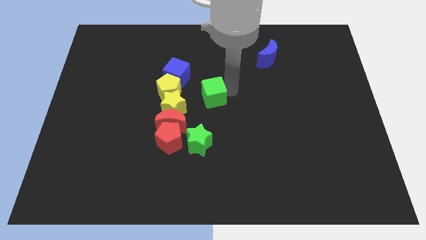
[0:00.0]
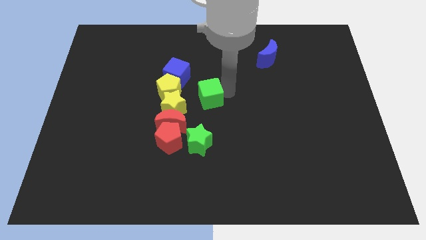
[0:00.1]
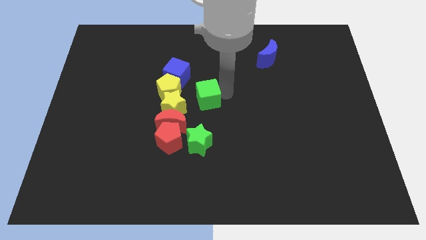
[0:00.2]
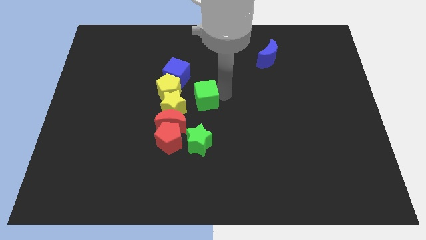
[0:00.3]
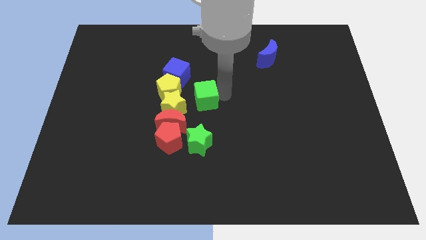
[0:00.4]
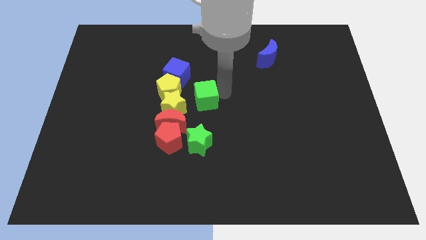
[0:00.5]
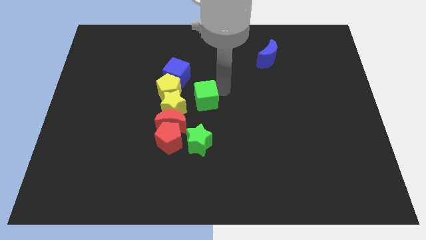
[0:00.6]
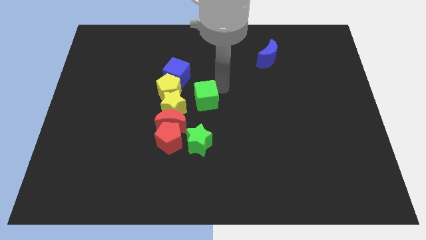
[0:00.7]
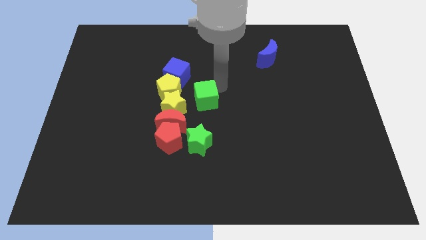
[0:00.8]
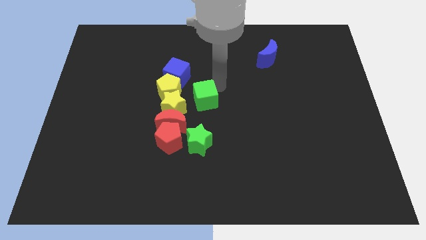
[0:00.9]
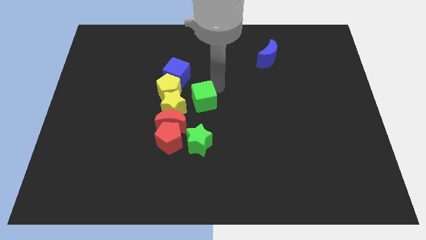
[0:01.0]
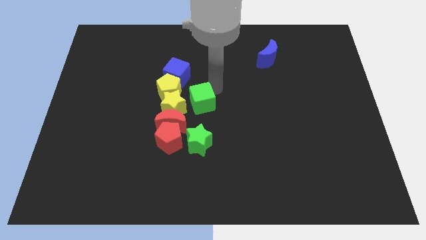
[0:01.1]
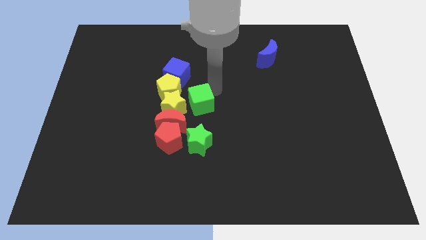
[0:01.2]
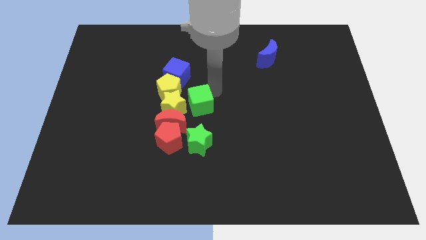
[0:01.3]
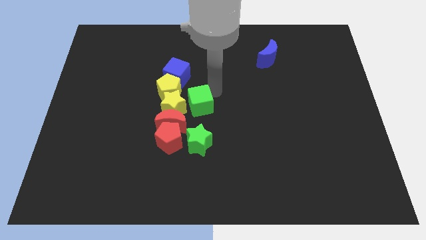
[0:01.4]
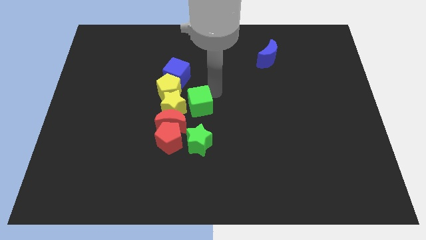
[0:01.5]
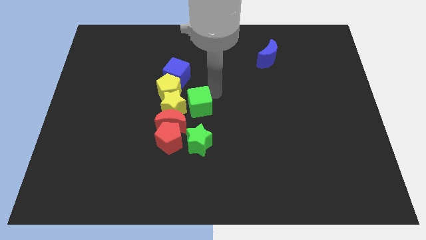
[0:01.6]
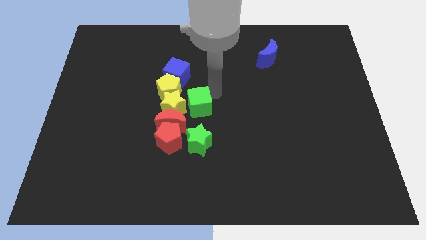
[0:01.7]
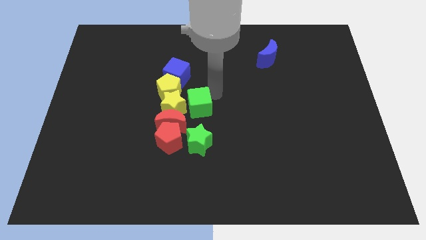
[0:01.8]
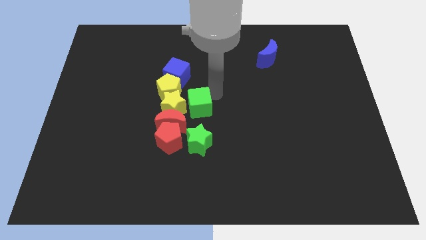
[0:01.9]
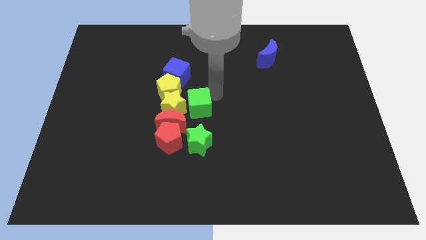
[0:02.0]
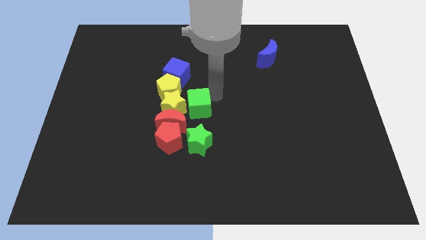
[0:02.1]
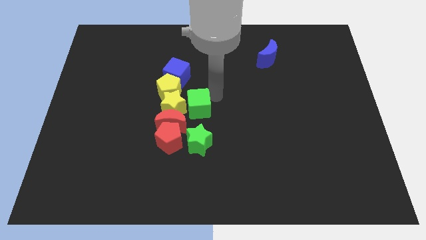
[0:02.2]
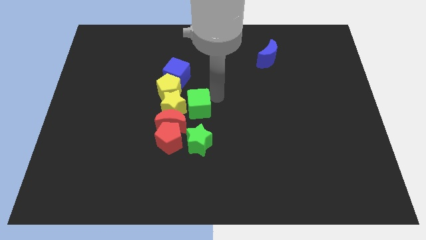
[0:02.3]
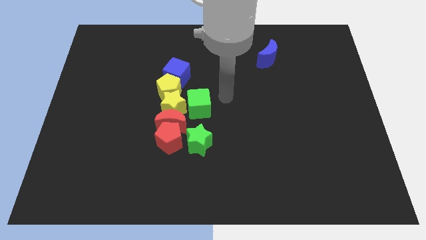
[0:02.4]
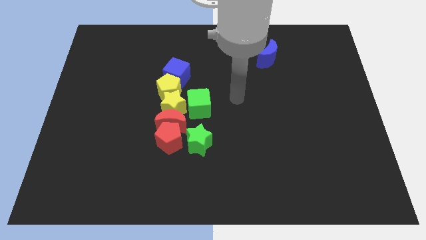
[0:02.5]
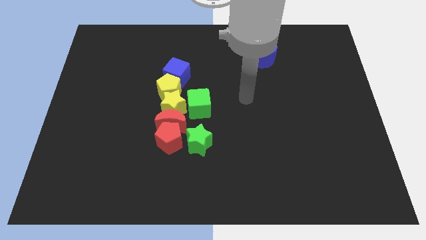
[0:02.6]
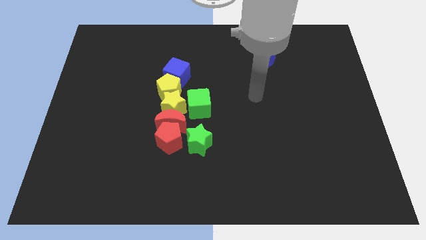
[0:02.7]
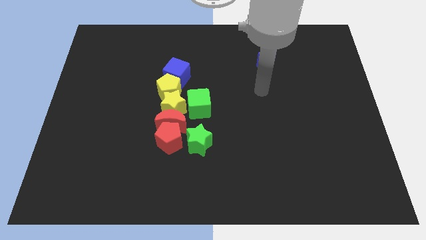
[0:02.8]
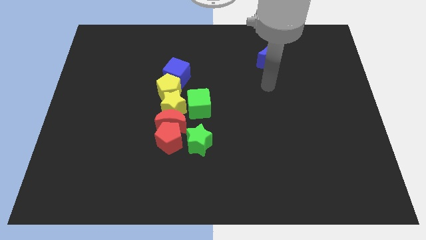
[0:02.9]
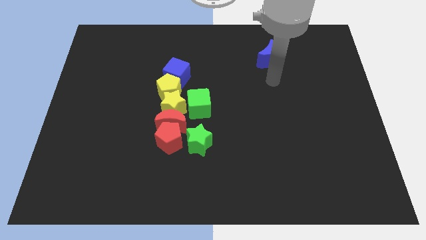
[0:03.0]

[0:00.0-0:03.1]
place the green star horizontally on the right side of the yellow star

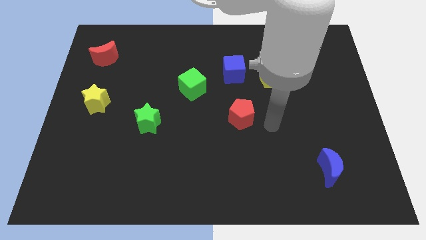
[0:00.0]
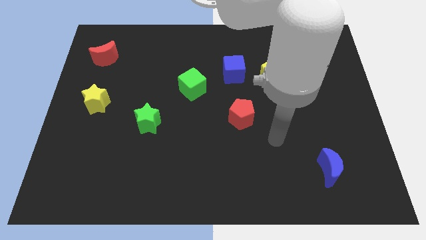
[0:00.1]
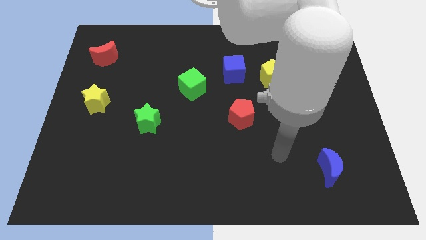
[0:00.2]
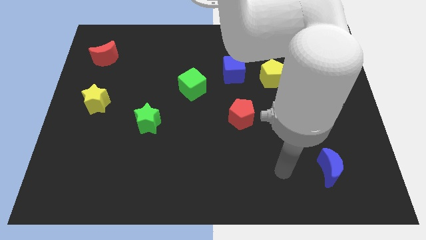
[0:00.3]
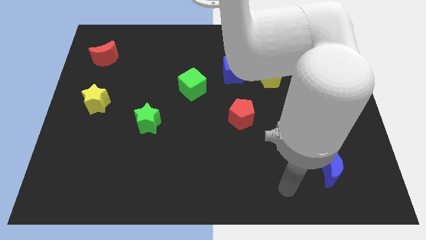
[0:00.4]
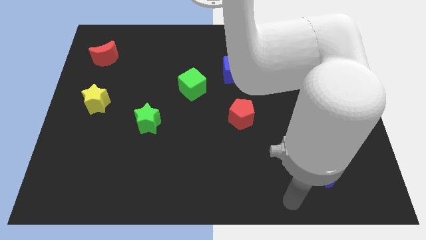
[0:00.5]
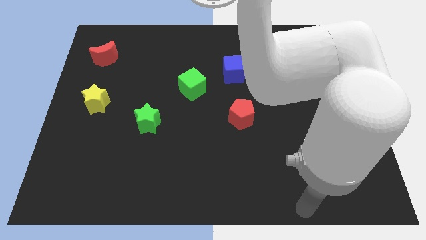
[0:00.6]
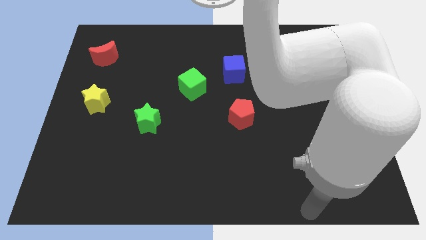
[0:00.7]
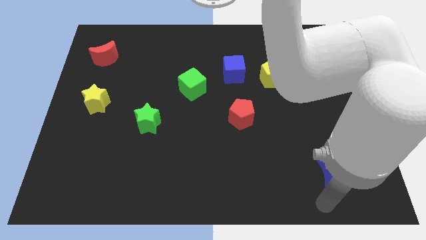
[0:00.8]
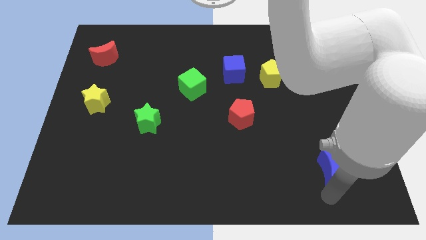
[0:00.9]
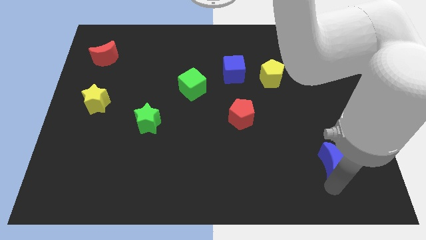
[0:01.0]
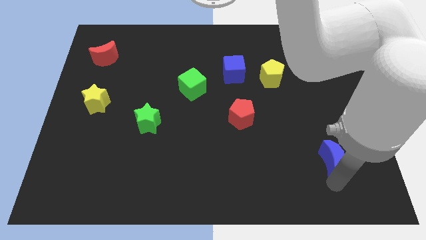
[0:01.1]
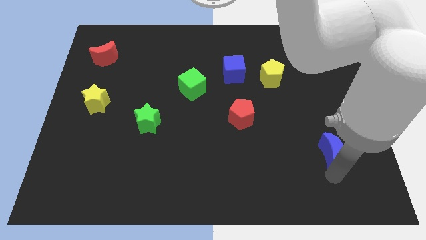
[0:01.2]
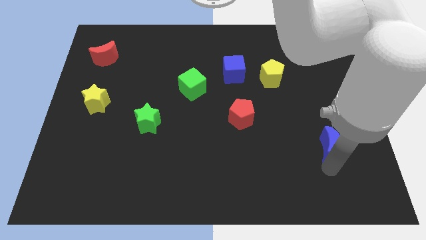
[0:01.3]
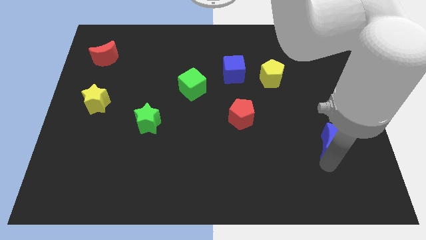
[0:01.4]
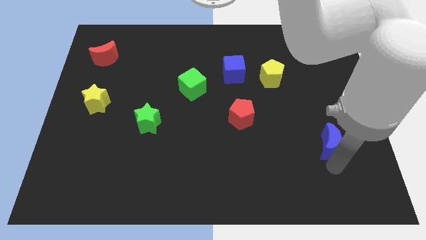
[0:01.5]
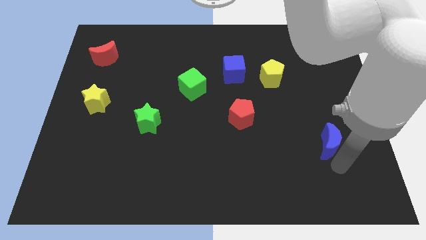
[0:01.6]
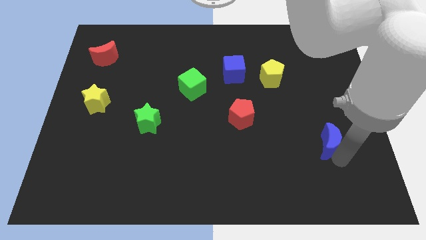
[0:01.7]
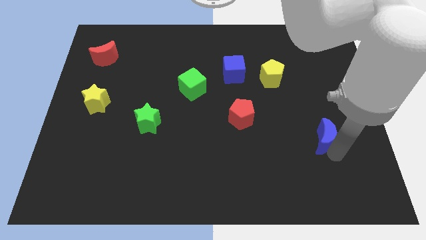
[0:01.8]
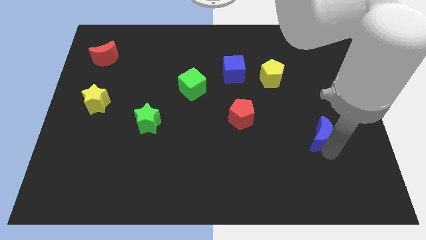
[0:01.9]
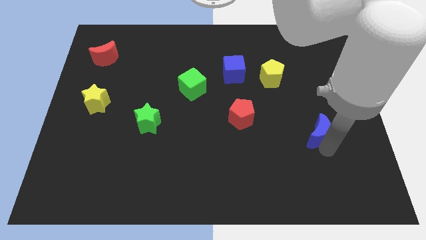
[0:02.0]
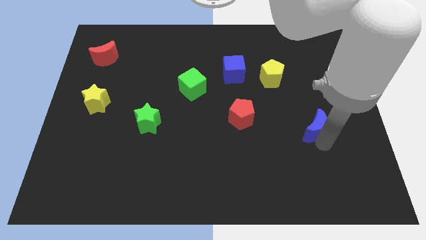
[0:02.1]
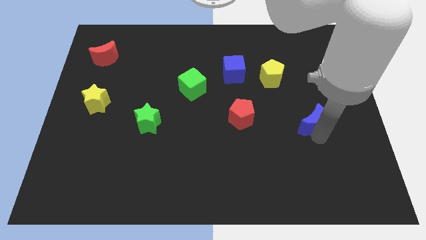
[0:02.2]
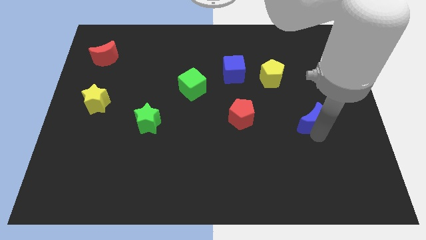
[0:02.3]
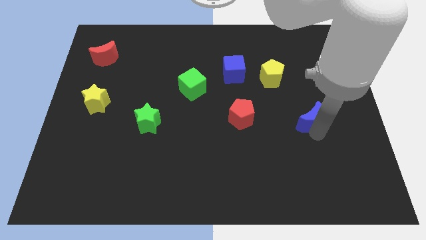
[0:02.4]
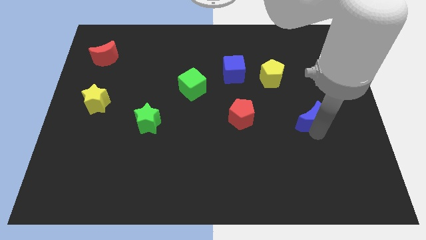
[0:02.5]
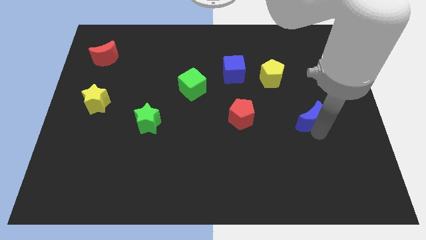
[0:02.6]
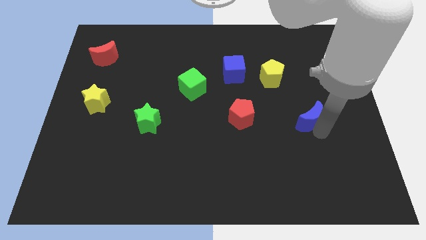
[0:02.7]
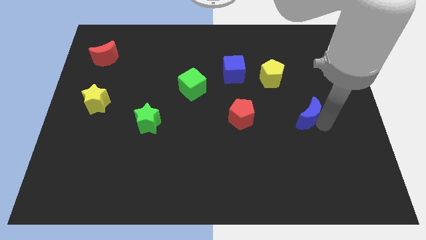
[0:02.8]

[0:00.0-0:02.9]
place the blue moon right to the red pentagon

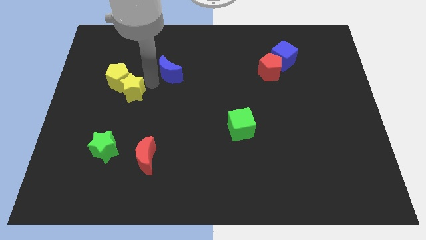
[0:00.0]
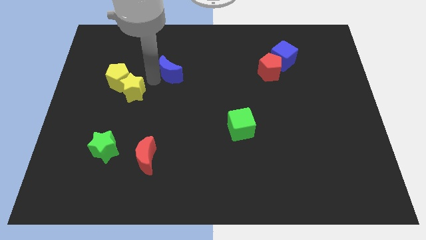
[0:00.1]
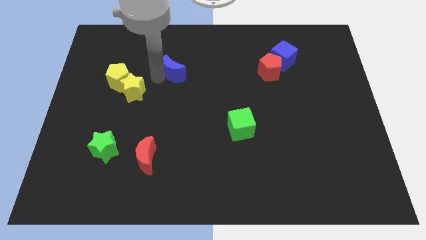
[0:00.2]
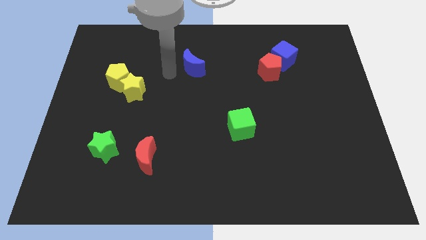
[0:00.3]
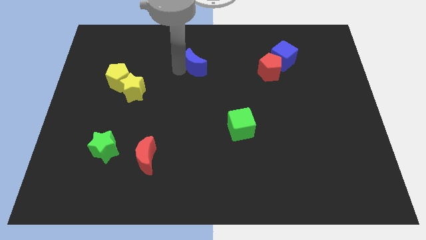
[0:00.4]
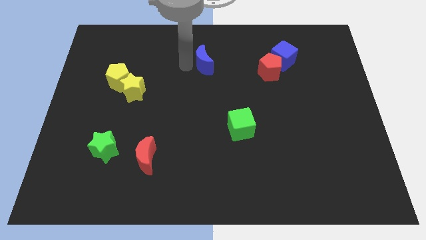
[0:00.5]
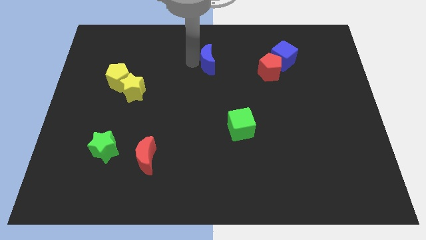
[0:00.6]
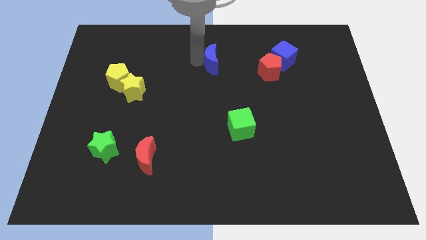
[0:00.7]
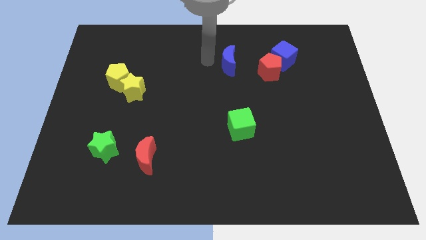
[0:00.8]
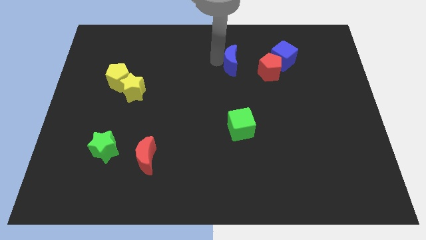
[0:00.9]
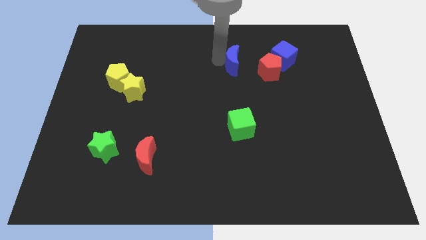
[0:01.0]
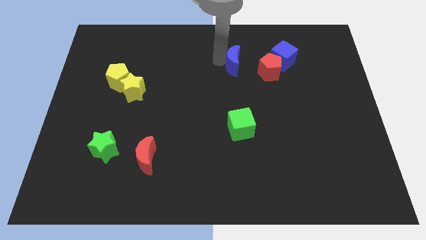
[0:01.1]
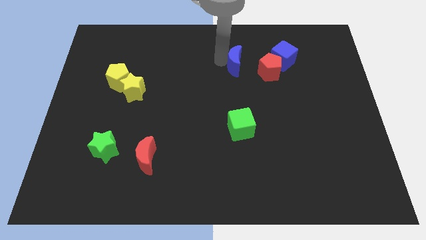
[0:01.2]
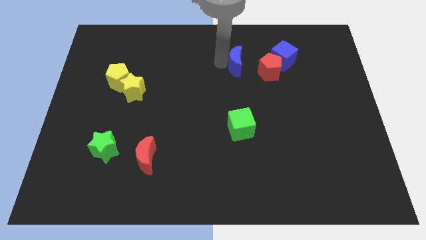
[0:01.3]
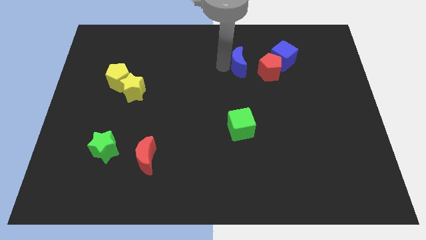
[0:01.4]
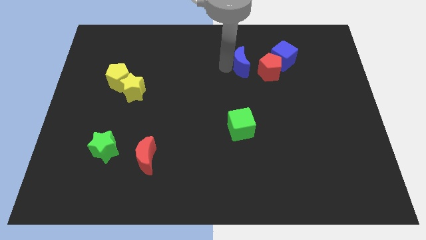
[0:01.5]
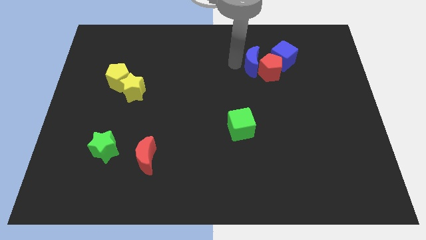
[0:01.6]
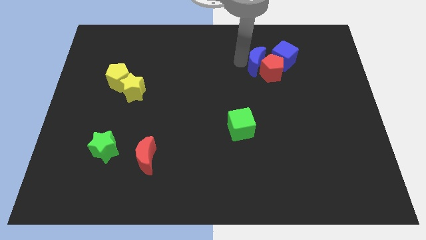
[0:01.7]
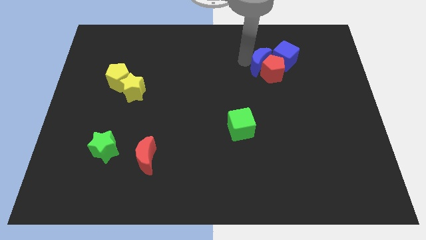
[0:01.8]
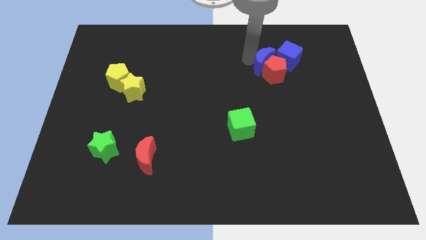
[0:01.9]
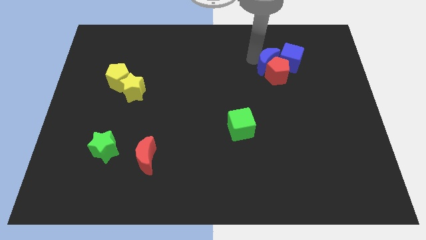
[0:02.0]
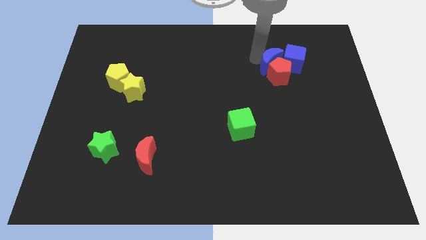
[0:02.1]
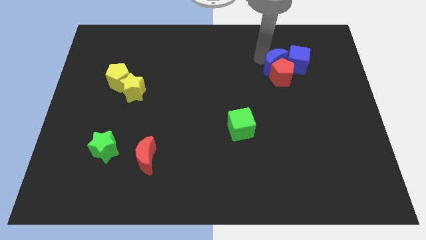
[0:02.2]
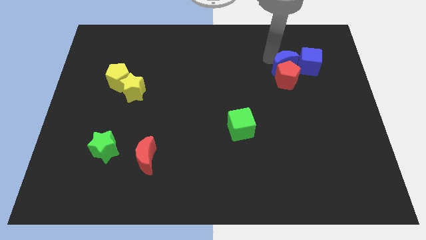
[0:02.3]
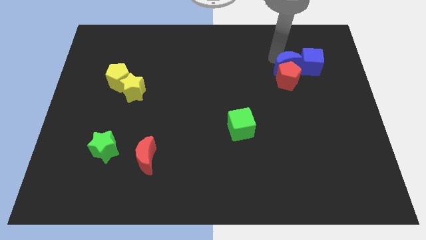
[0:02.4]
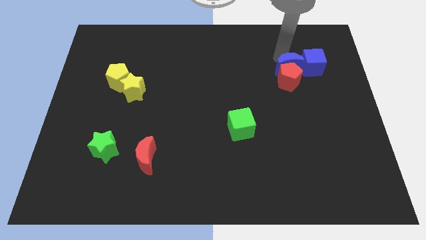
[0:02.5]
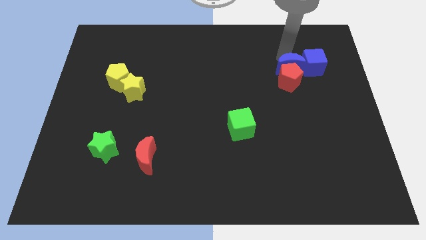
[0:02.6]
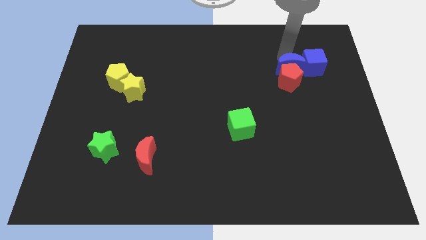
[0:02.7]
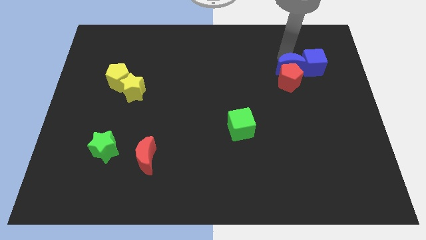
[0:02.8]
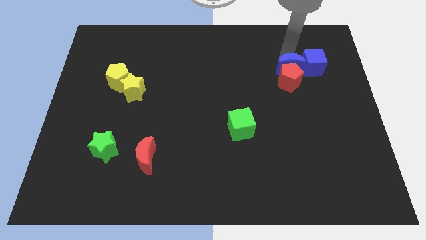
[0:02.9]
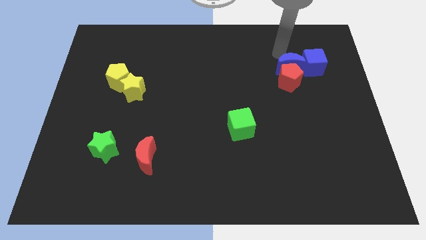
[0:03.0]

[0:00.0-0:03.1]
move the blue moon into the group of blocks

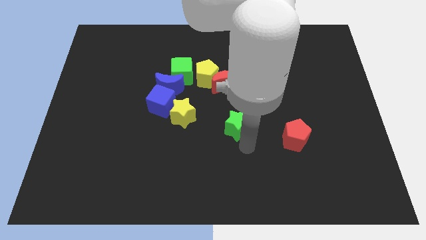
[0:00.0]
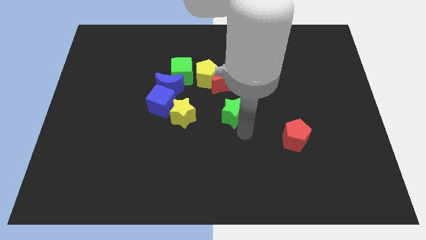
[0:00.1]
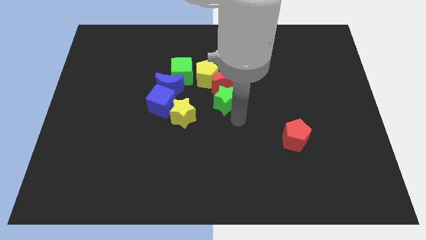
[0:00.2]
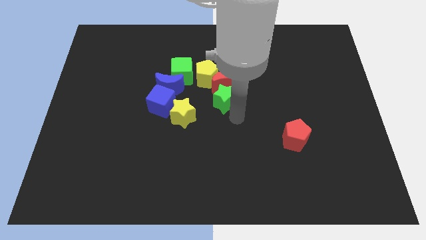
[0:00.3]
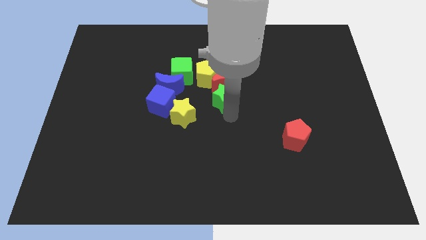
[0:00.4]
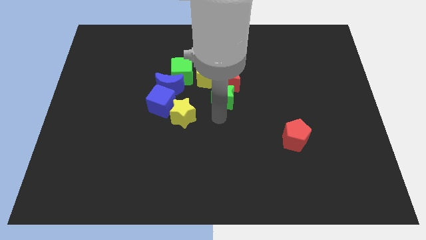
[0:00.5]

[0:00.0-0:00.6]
push the green star under the red crescent
